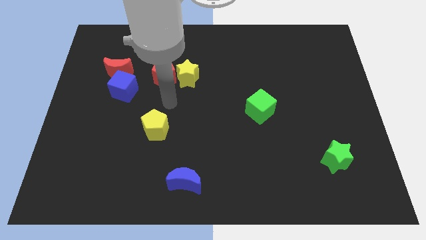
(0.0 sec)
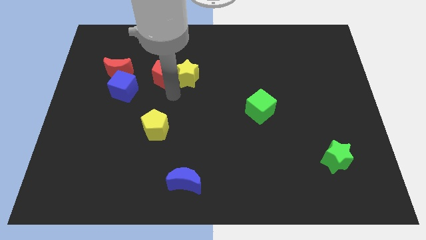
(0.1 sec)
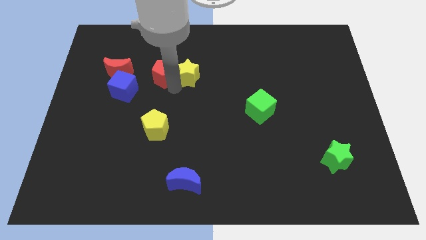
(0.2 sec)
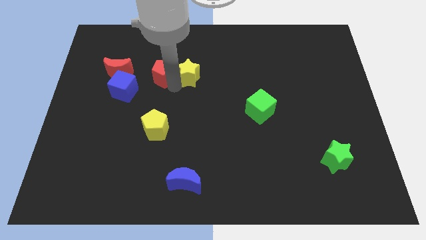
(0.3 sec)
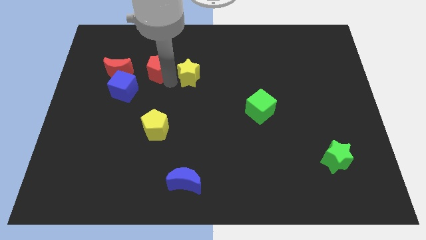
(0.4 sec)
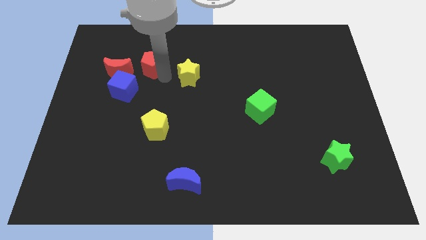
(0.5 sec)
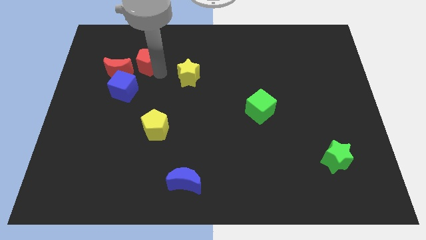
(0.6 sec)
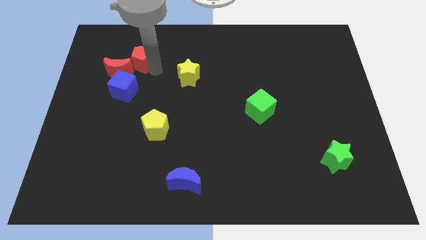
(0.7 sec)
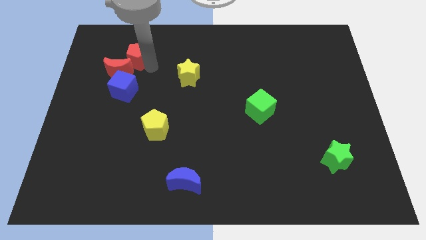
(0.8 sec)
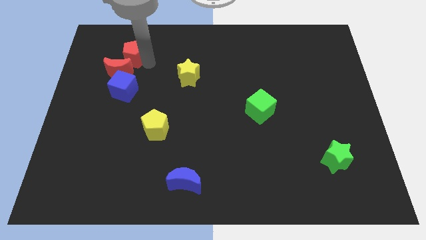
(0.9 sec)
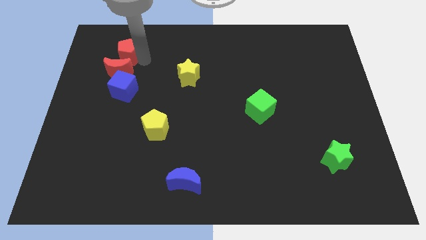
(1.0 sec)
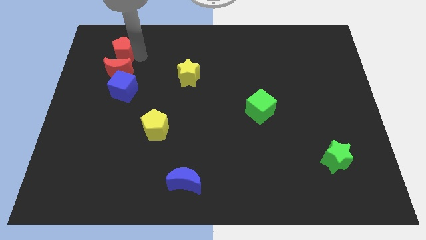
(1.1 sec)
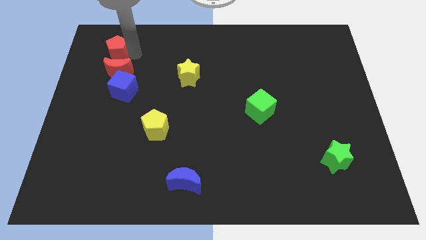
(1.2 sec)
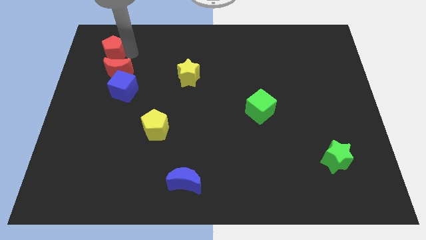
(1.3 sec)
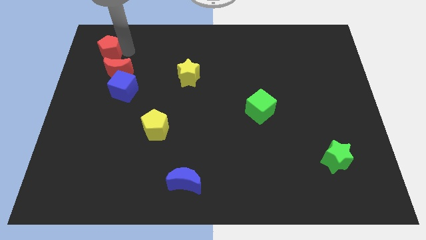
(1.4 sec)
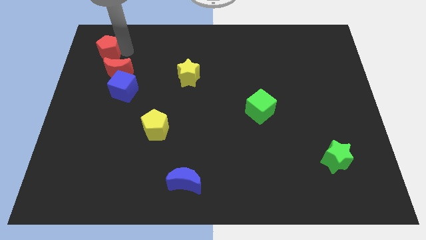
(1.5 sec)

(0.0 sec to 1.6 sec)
place red pentagon above red moon

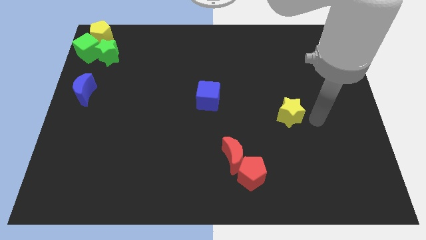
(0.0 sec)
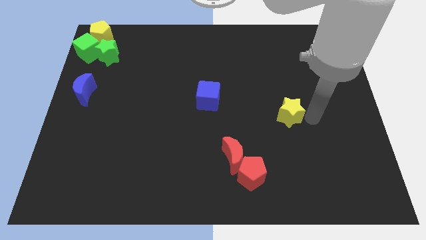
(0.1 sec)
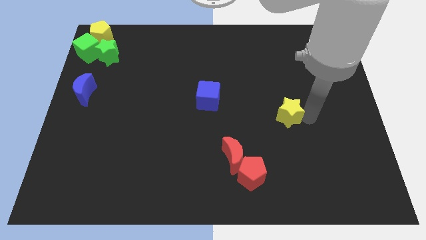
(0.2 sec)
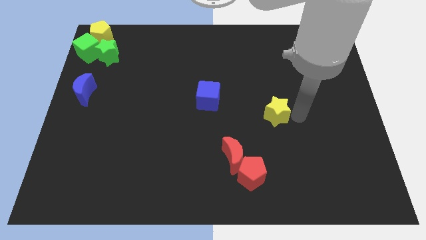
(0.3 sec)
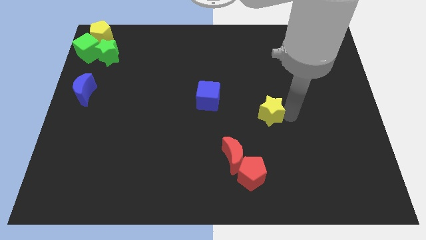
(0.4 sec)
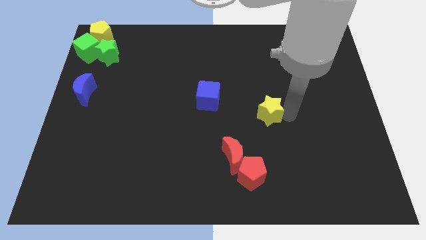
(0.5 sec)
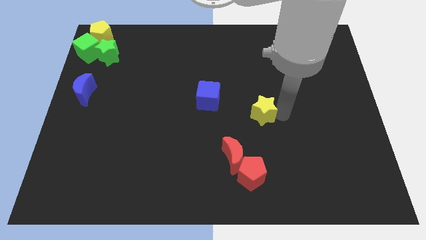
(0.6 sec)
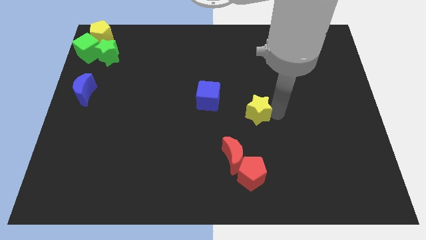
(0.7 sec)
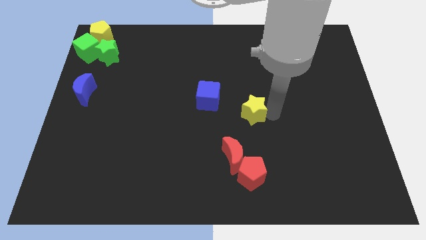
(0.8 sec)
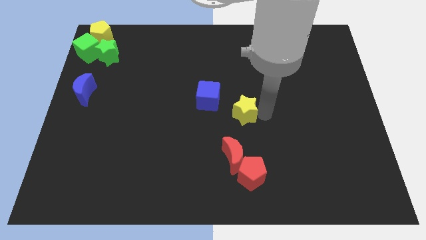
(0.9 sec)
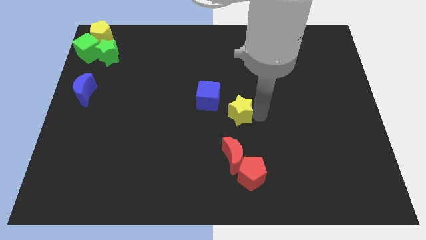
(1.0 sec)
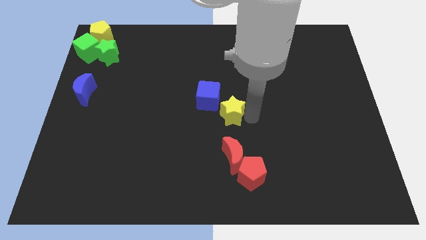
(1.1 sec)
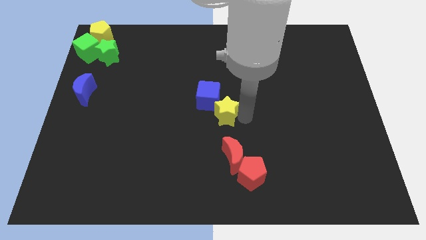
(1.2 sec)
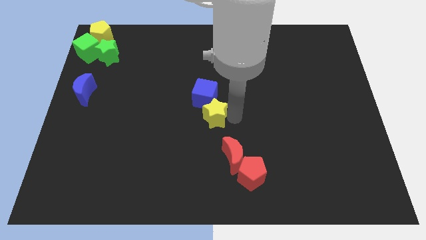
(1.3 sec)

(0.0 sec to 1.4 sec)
put the yellow star into the blue cube

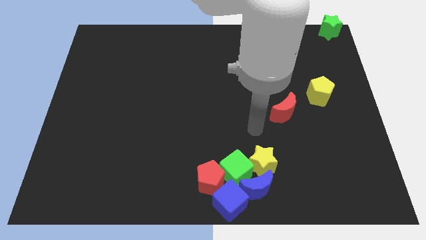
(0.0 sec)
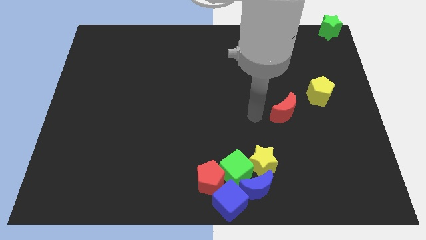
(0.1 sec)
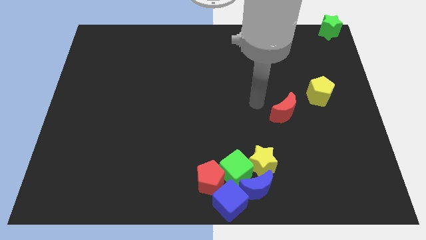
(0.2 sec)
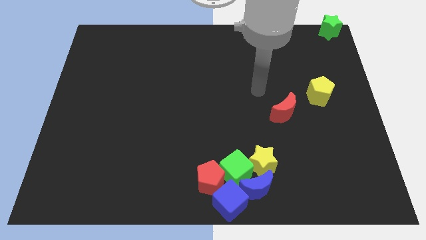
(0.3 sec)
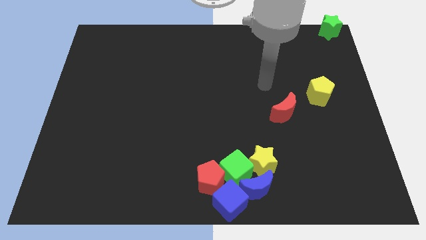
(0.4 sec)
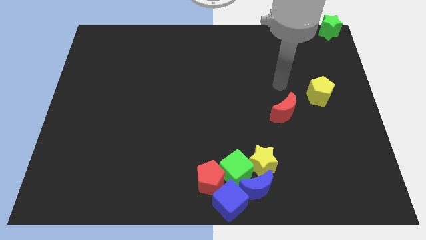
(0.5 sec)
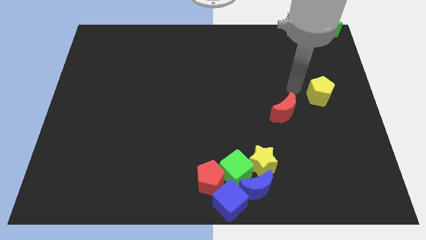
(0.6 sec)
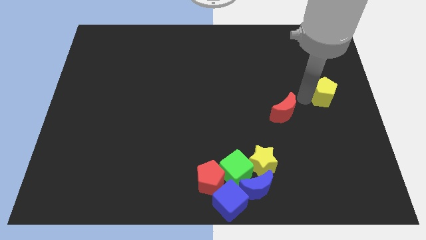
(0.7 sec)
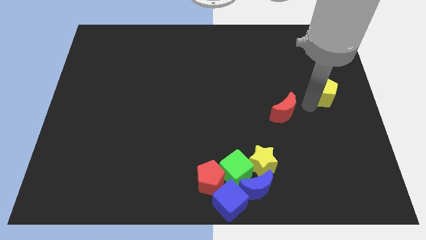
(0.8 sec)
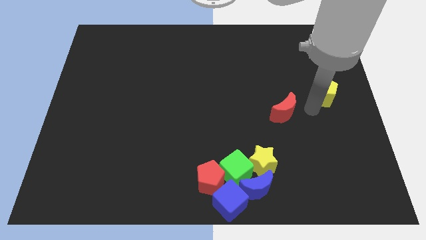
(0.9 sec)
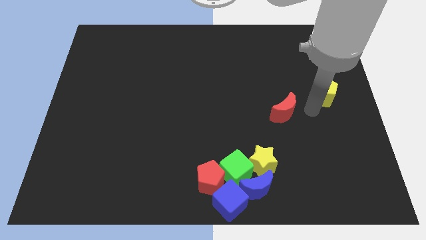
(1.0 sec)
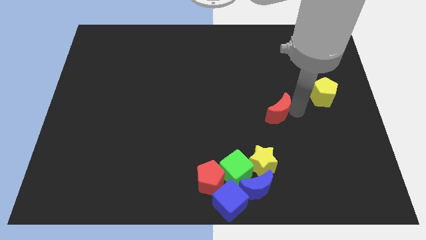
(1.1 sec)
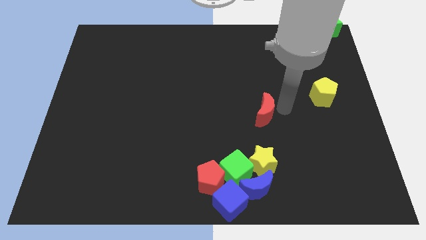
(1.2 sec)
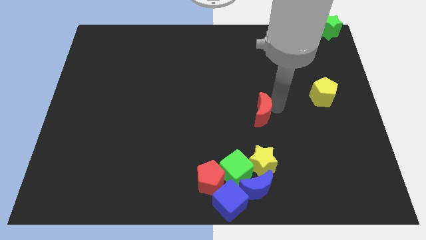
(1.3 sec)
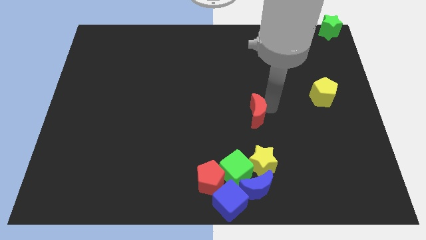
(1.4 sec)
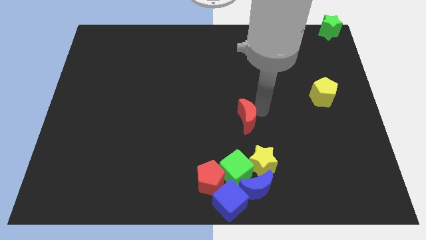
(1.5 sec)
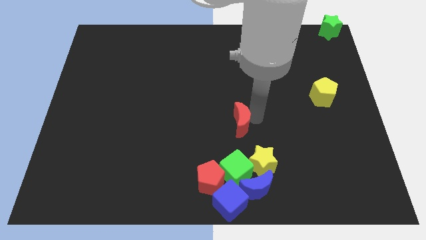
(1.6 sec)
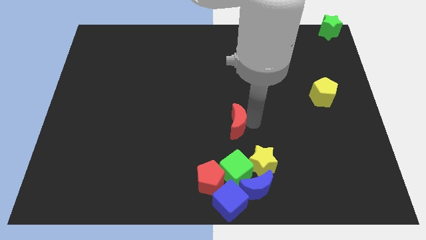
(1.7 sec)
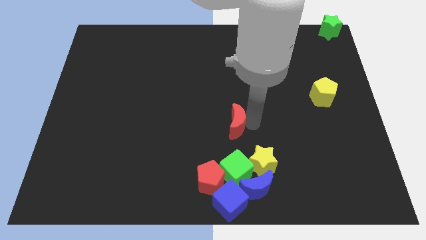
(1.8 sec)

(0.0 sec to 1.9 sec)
push the red moon on top of the green cube

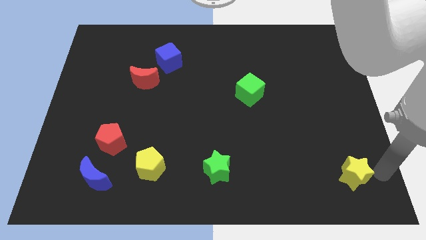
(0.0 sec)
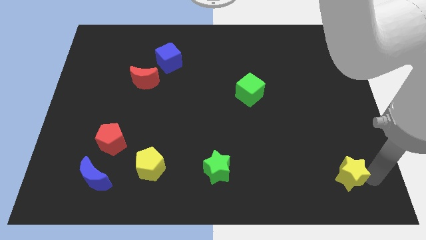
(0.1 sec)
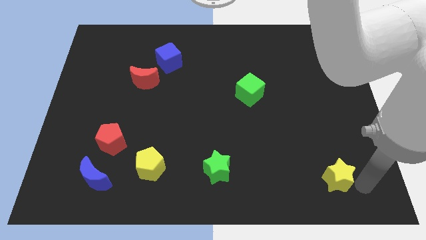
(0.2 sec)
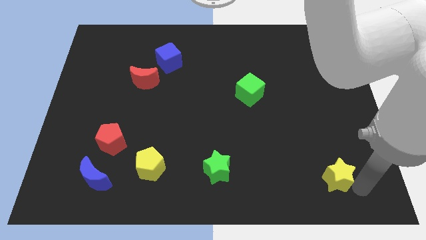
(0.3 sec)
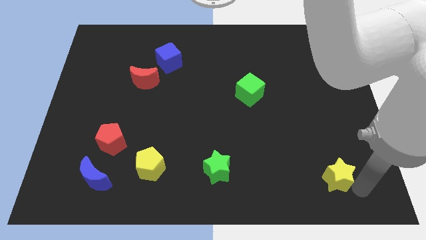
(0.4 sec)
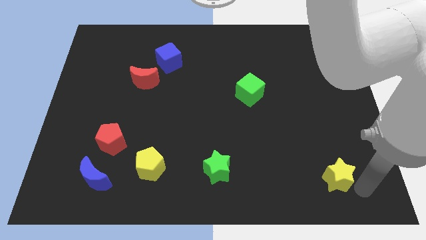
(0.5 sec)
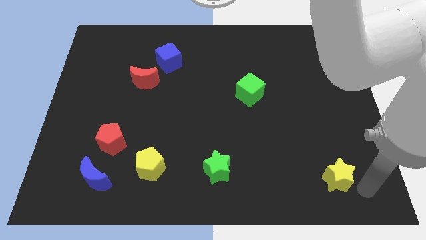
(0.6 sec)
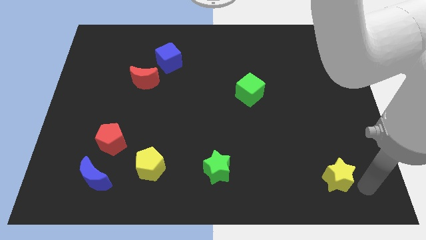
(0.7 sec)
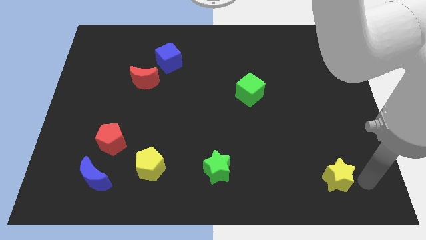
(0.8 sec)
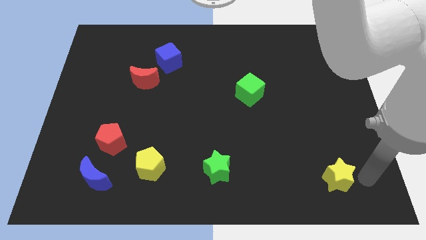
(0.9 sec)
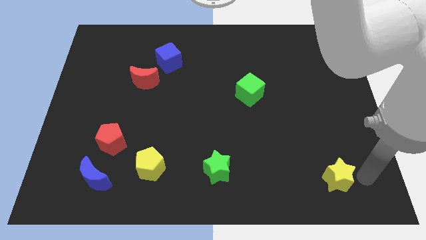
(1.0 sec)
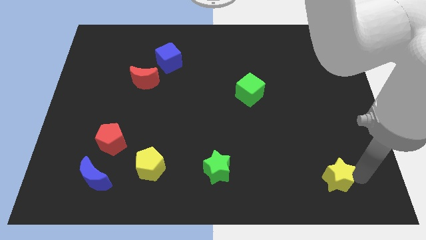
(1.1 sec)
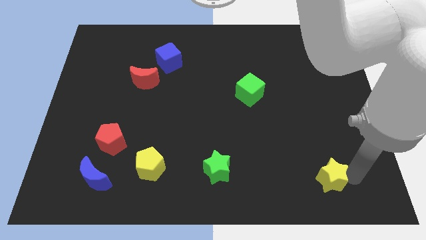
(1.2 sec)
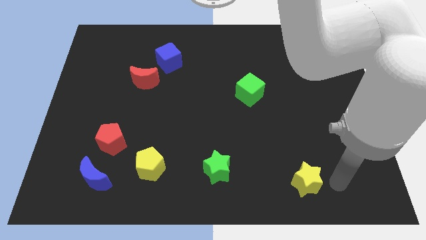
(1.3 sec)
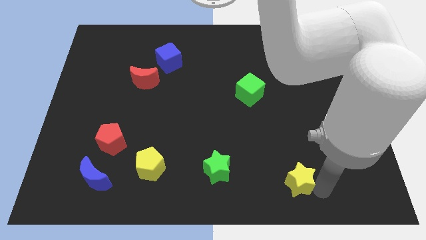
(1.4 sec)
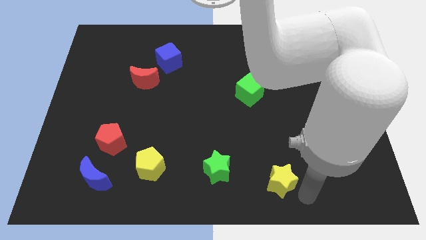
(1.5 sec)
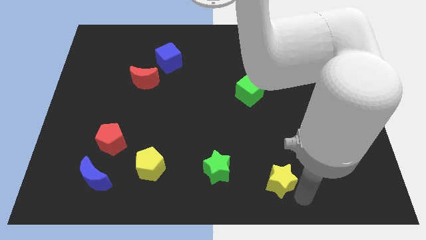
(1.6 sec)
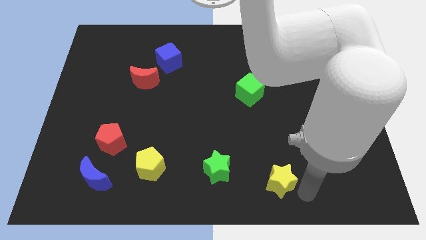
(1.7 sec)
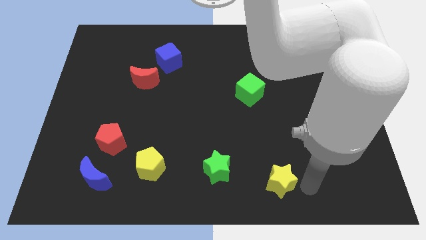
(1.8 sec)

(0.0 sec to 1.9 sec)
slide the yellow star to the left

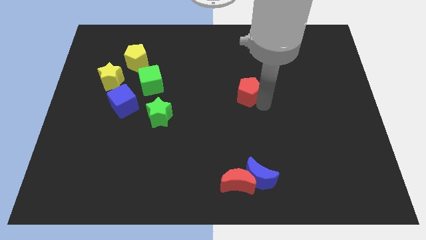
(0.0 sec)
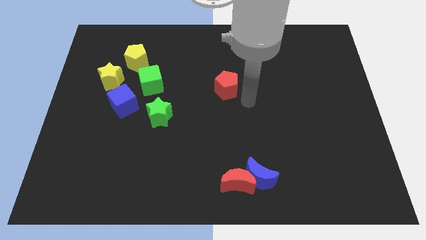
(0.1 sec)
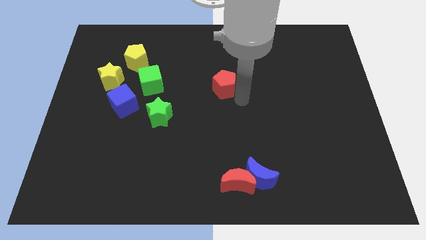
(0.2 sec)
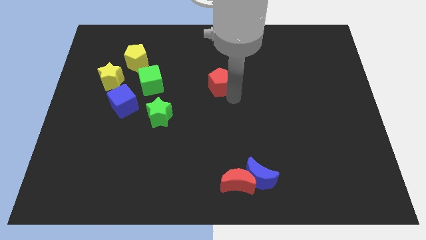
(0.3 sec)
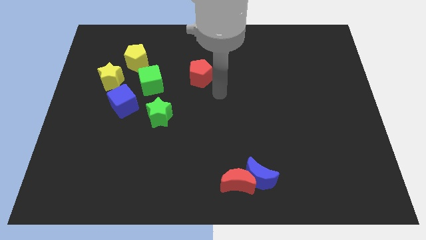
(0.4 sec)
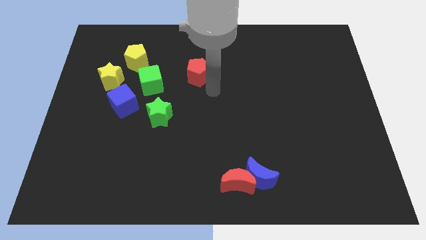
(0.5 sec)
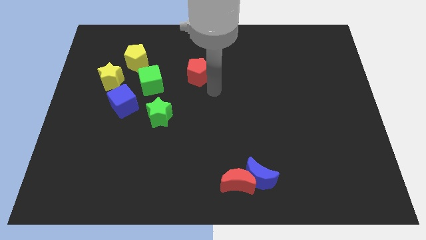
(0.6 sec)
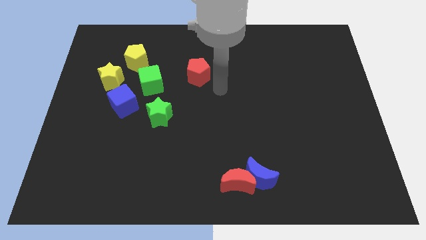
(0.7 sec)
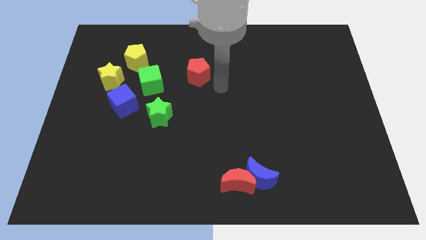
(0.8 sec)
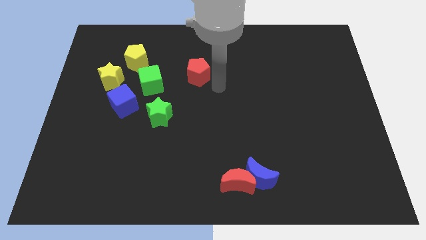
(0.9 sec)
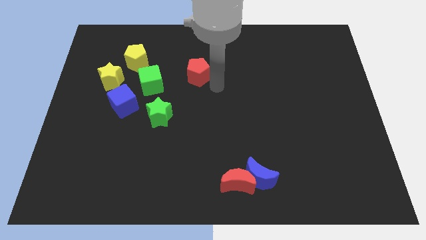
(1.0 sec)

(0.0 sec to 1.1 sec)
place the red pentagon right to the green cube

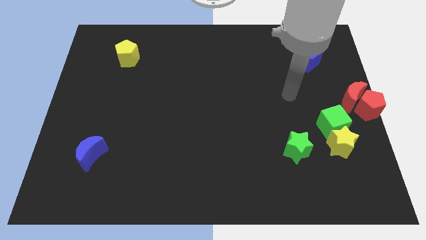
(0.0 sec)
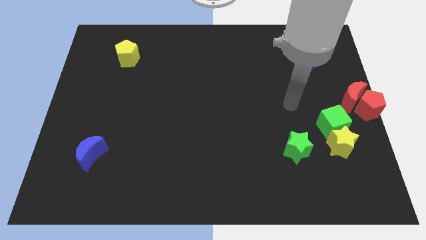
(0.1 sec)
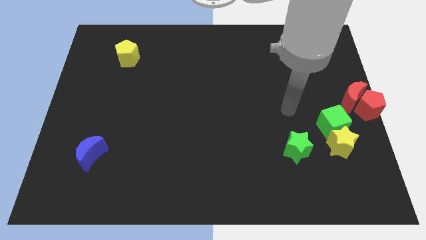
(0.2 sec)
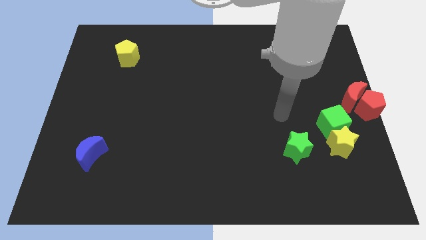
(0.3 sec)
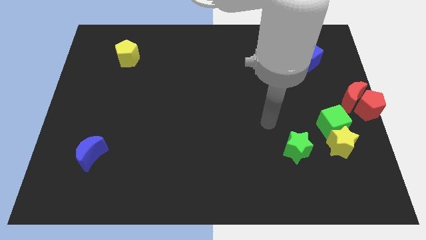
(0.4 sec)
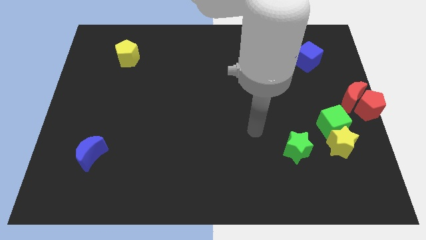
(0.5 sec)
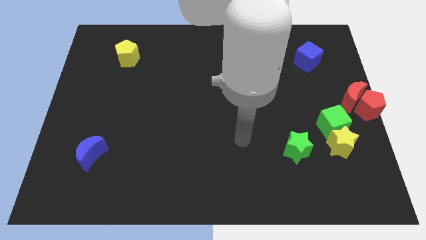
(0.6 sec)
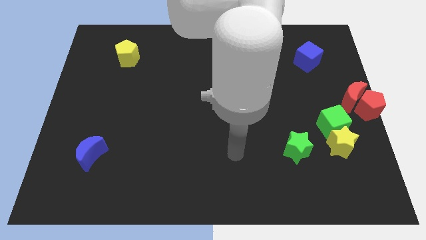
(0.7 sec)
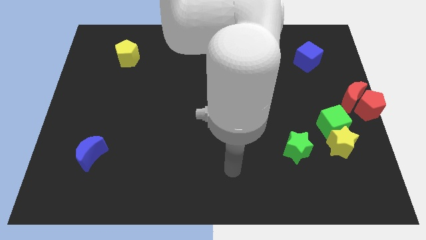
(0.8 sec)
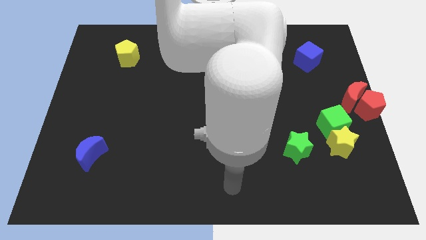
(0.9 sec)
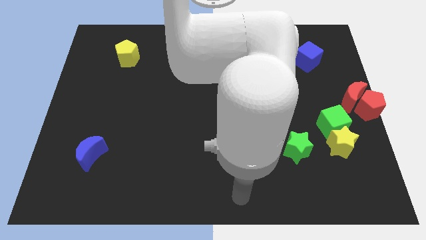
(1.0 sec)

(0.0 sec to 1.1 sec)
place your arm at the bottom side of the board
